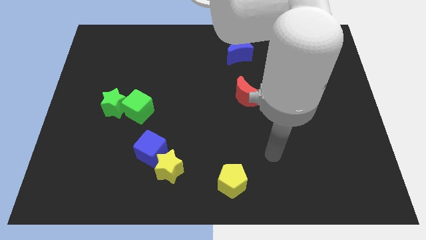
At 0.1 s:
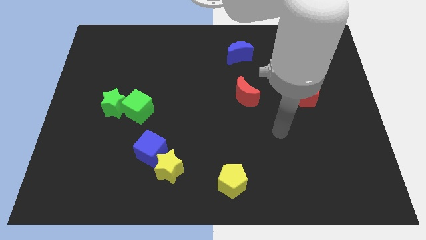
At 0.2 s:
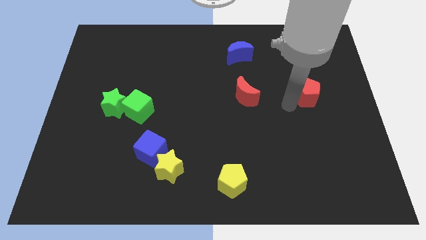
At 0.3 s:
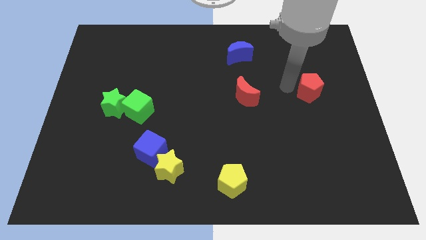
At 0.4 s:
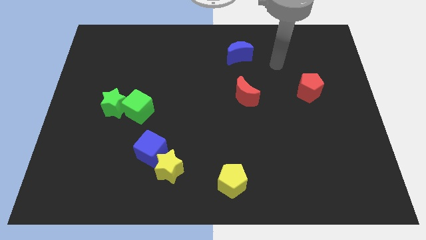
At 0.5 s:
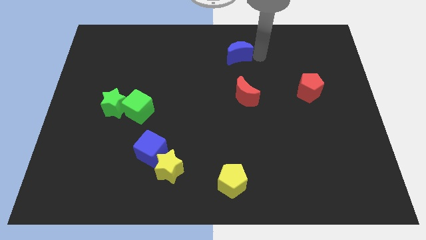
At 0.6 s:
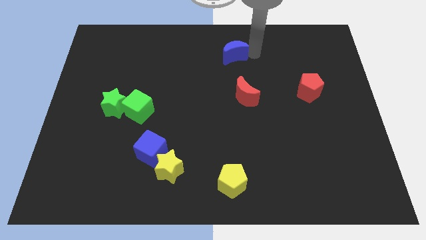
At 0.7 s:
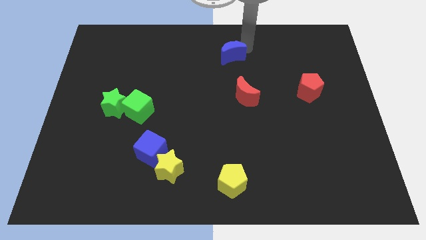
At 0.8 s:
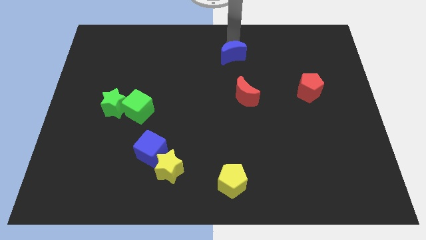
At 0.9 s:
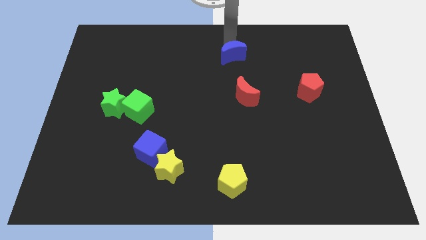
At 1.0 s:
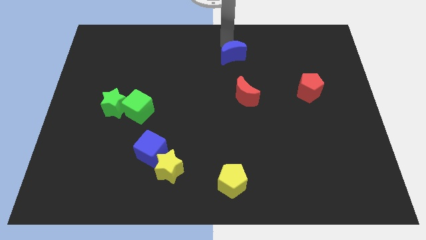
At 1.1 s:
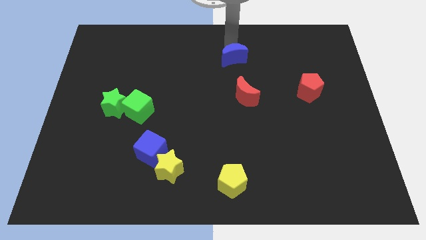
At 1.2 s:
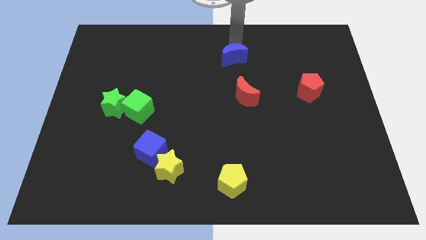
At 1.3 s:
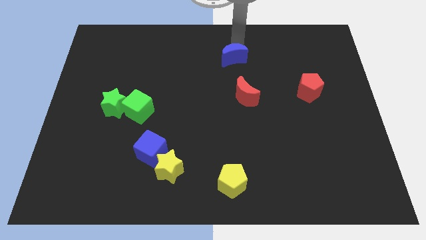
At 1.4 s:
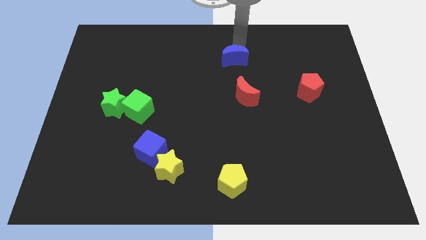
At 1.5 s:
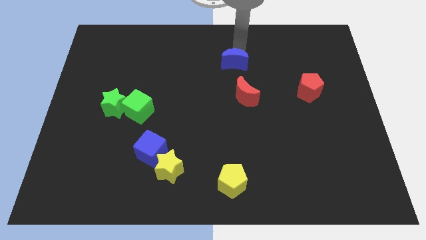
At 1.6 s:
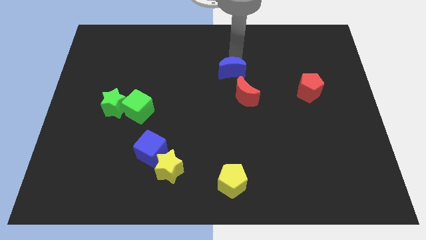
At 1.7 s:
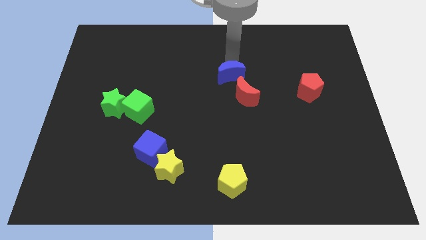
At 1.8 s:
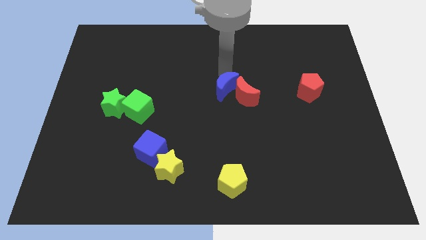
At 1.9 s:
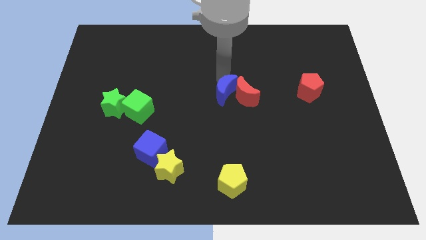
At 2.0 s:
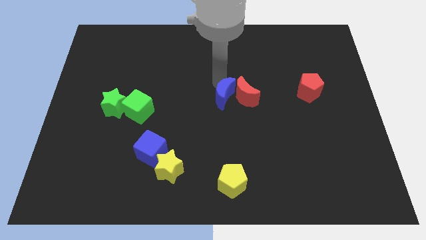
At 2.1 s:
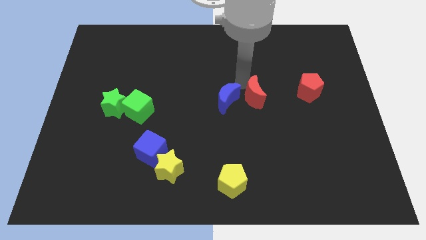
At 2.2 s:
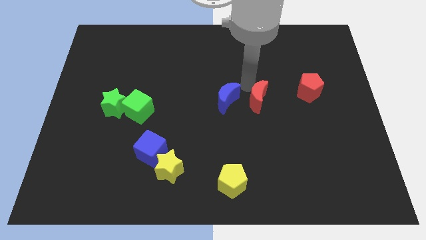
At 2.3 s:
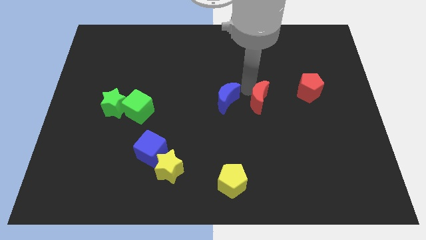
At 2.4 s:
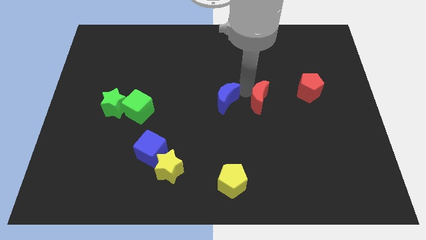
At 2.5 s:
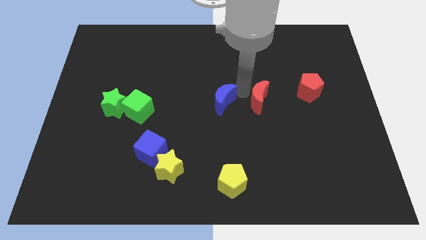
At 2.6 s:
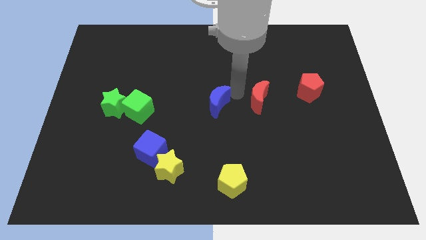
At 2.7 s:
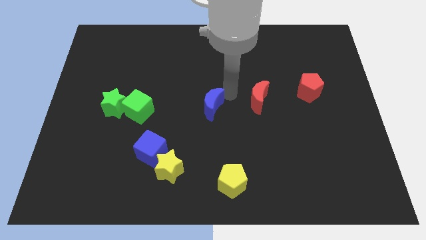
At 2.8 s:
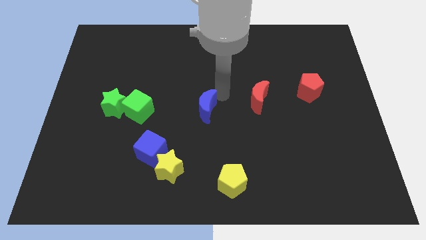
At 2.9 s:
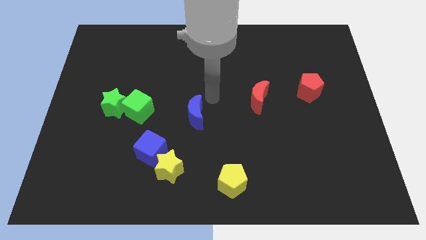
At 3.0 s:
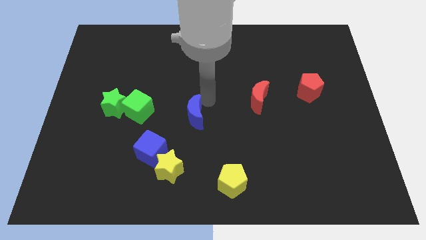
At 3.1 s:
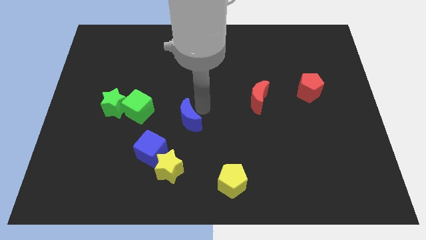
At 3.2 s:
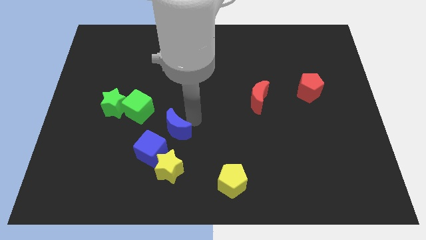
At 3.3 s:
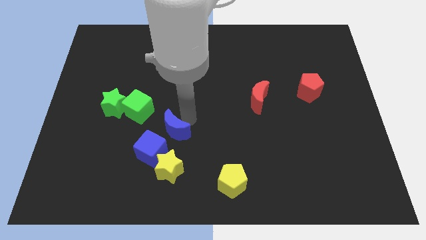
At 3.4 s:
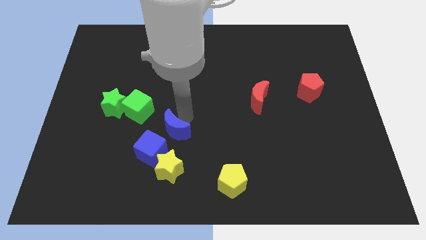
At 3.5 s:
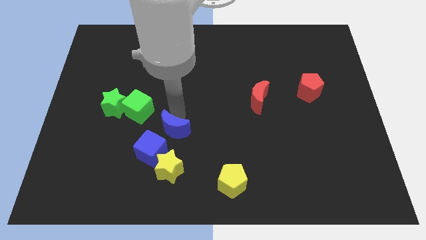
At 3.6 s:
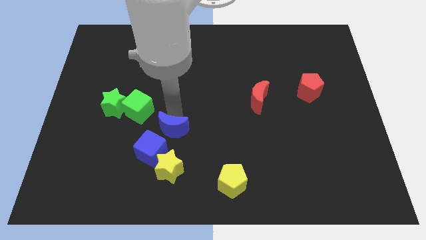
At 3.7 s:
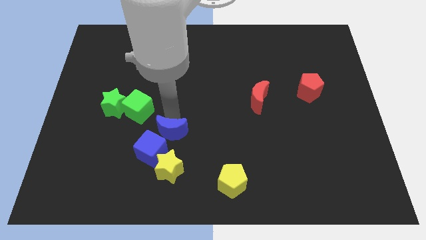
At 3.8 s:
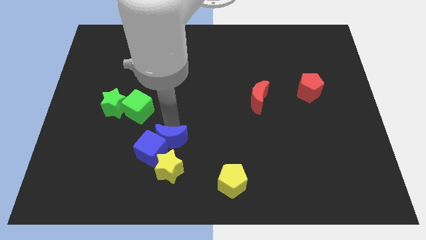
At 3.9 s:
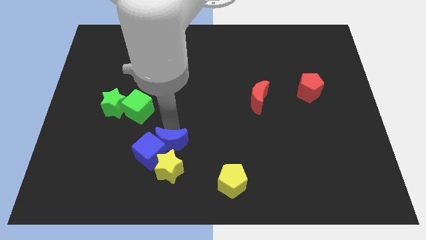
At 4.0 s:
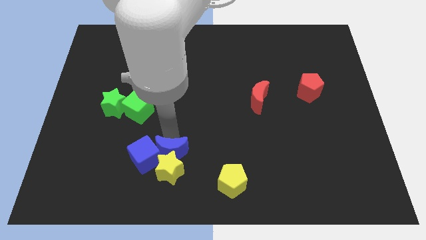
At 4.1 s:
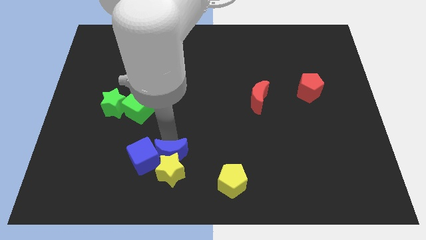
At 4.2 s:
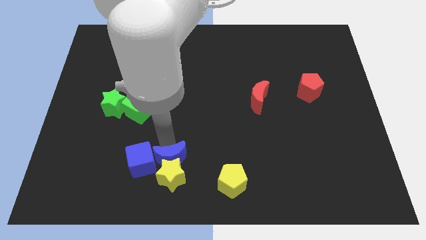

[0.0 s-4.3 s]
slide the blue moon towards the yellow star

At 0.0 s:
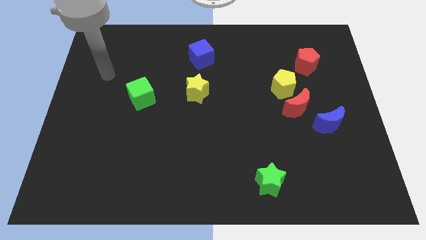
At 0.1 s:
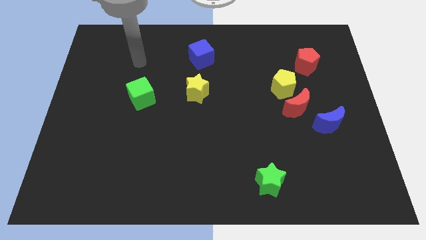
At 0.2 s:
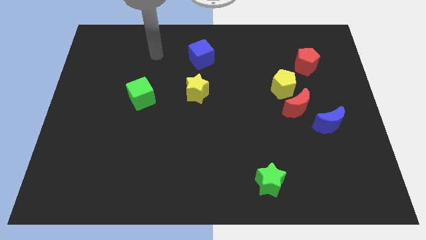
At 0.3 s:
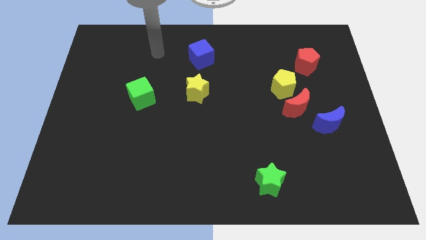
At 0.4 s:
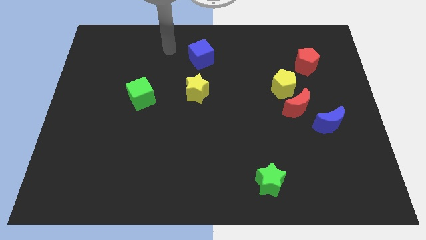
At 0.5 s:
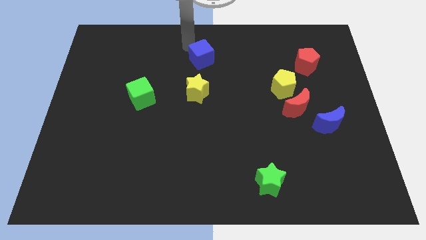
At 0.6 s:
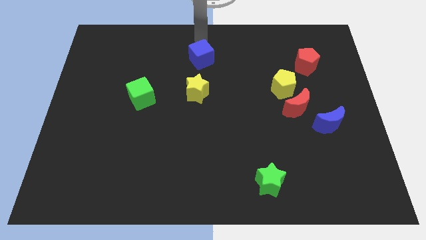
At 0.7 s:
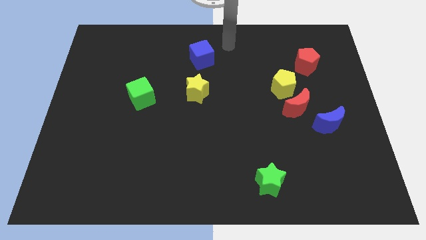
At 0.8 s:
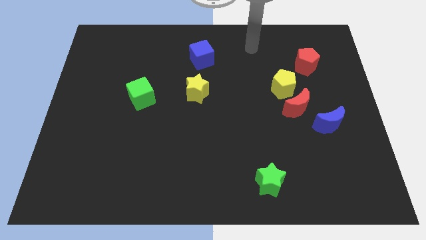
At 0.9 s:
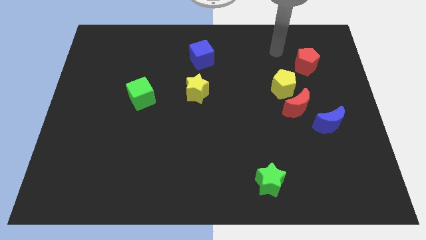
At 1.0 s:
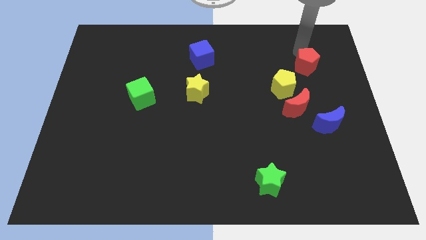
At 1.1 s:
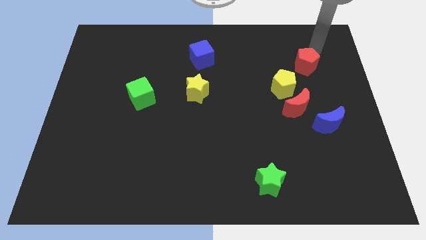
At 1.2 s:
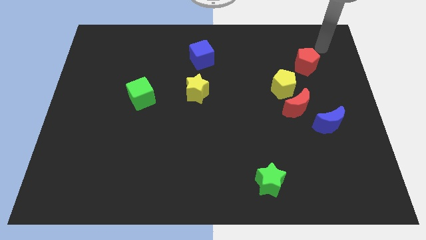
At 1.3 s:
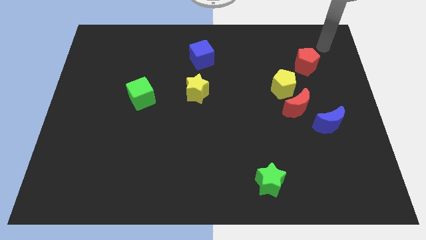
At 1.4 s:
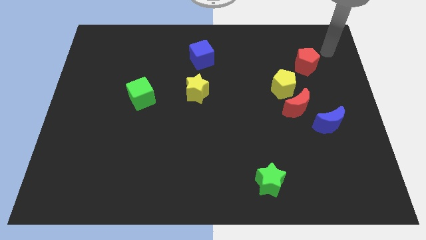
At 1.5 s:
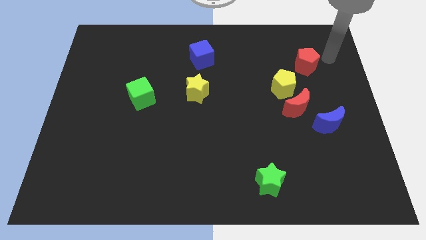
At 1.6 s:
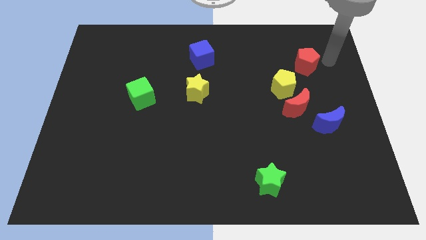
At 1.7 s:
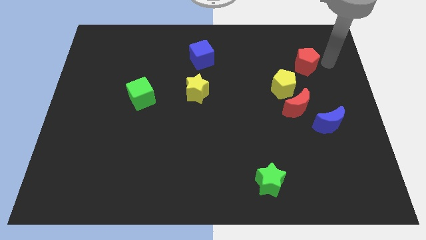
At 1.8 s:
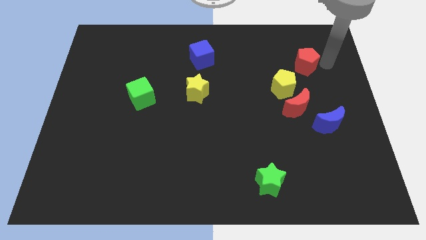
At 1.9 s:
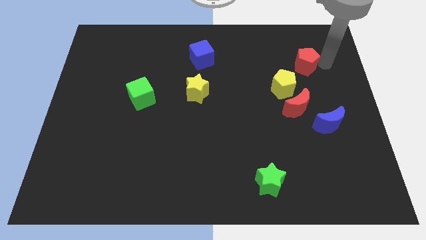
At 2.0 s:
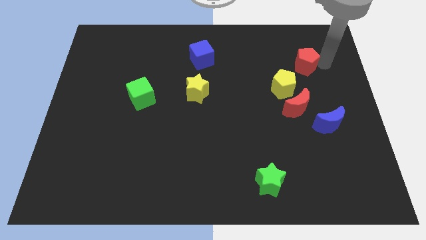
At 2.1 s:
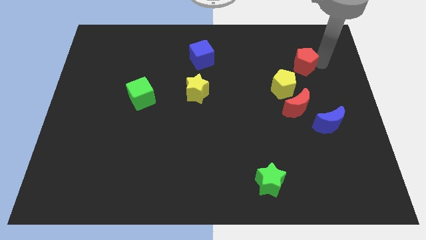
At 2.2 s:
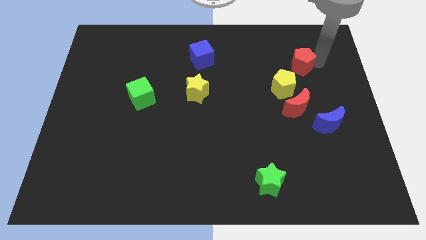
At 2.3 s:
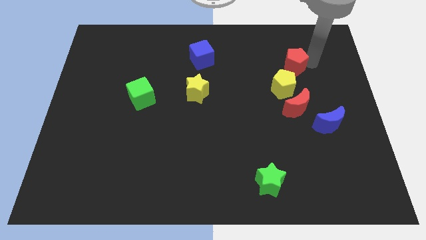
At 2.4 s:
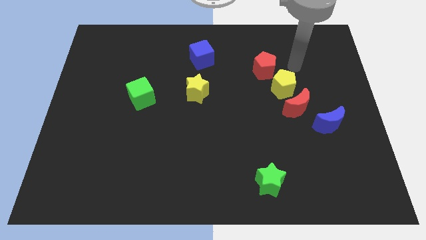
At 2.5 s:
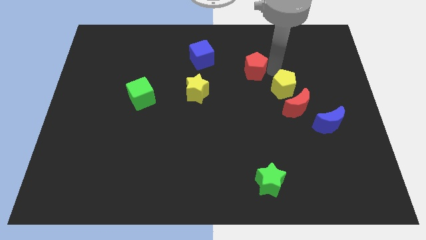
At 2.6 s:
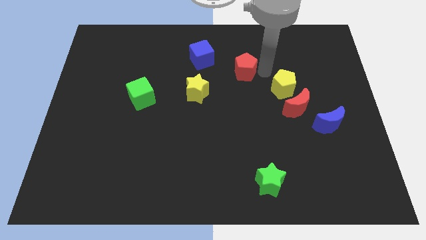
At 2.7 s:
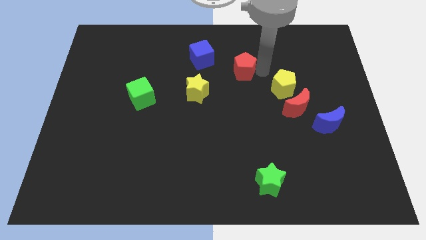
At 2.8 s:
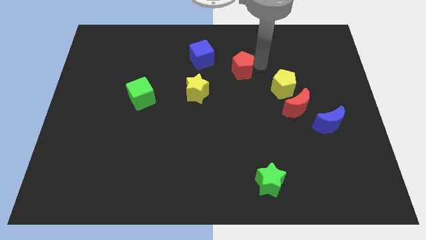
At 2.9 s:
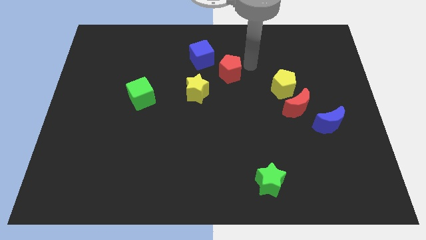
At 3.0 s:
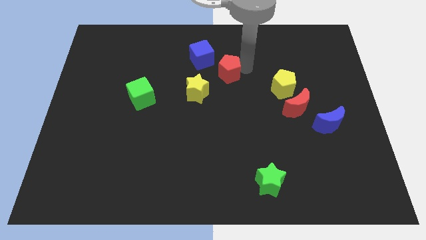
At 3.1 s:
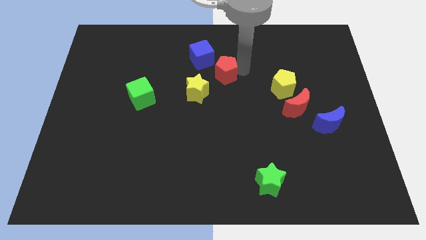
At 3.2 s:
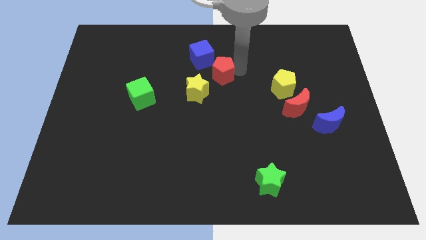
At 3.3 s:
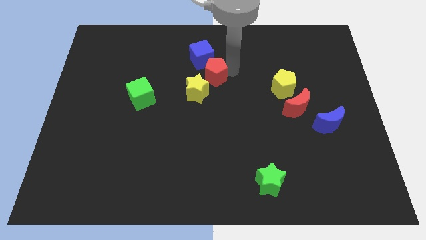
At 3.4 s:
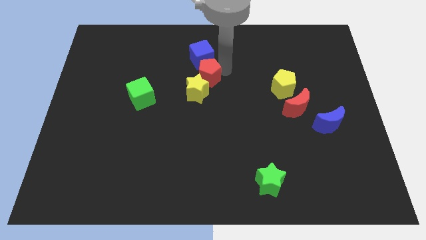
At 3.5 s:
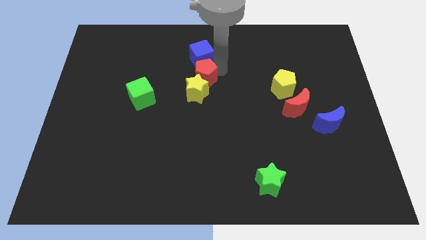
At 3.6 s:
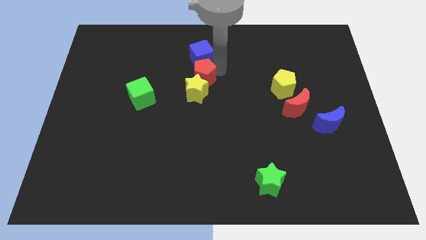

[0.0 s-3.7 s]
push the red pentagon next to the yellow star

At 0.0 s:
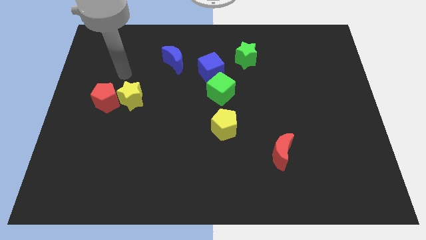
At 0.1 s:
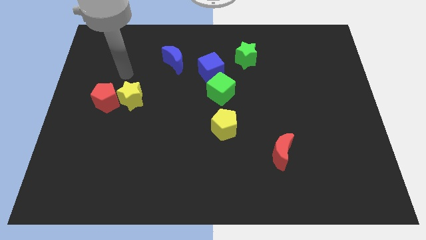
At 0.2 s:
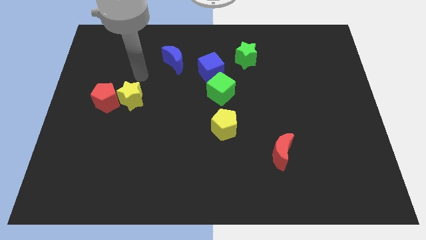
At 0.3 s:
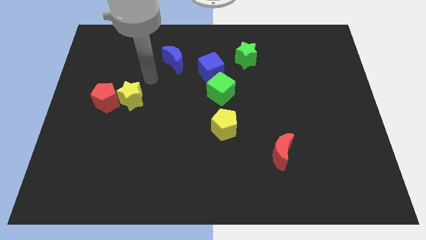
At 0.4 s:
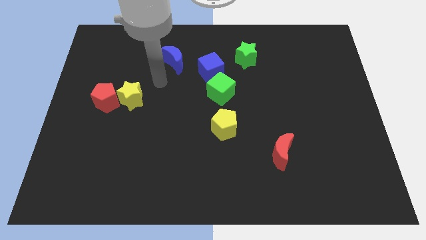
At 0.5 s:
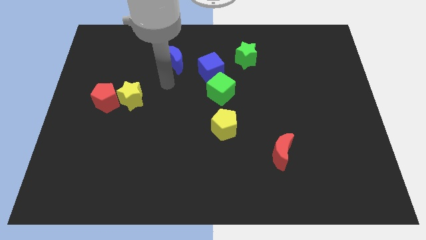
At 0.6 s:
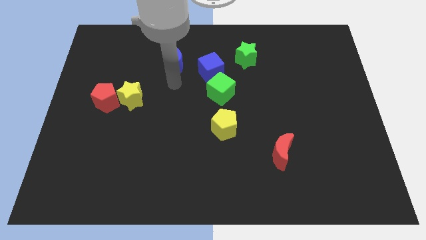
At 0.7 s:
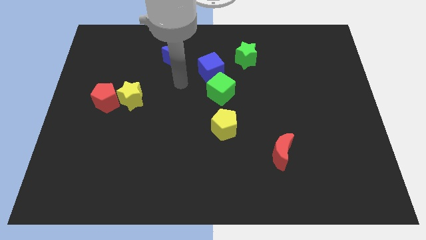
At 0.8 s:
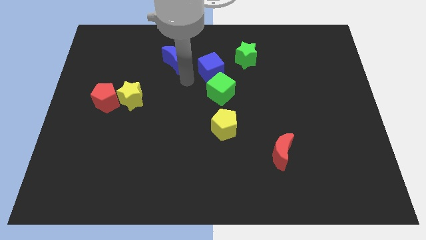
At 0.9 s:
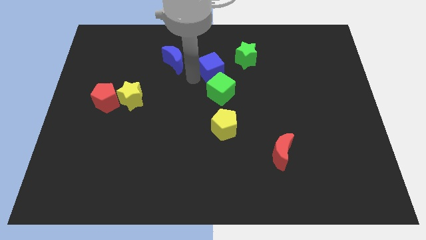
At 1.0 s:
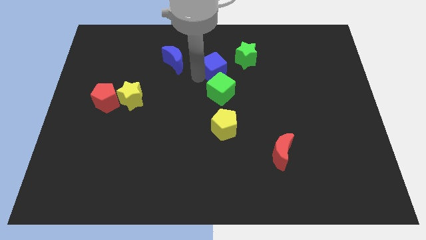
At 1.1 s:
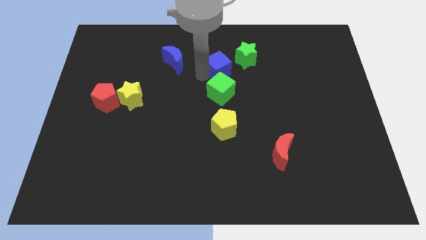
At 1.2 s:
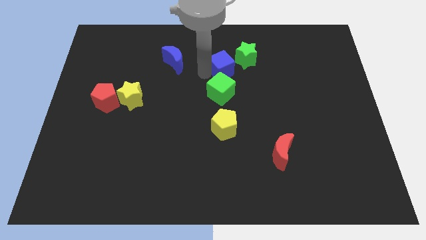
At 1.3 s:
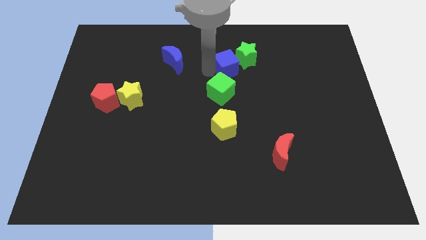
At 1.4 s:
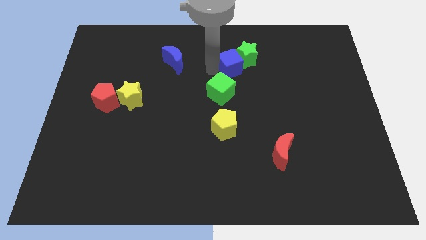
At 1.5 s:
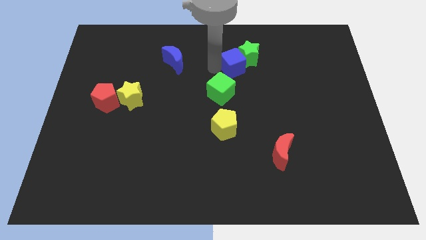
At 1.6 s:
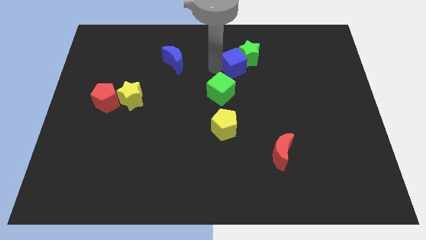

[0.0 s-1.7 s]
push the blue cube next to the green star
